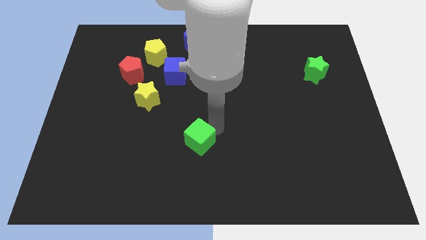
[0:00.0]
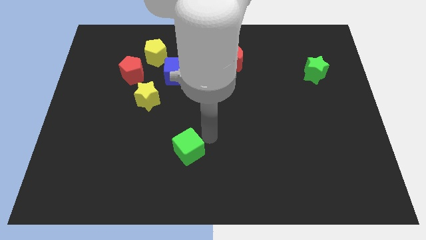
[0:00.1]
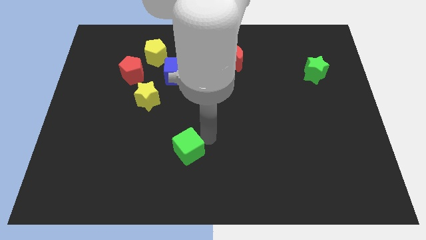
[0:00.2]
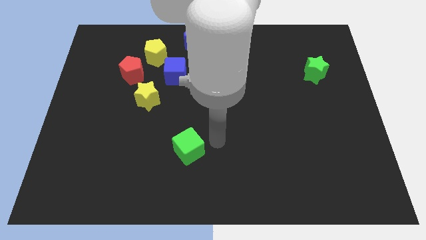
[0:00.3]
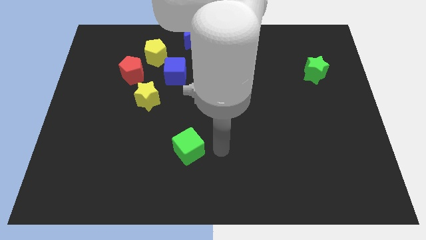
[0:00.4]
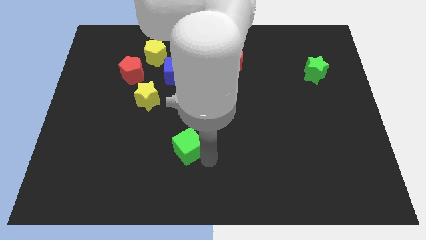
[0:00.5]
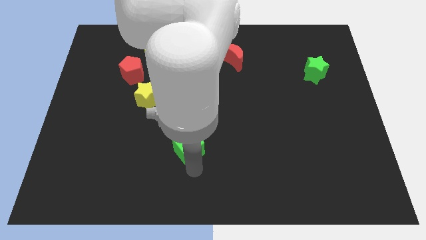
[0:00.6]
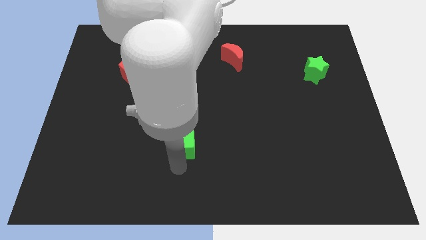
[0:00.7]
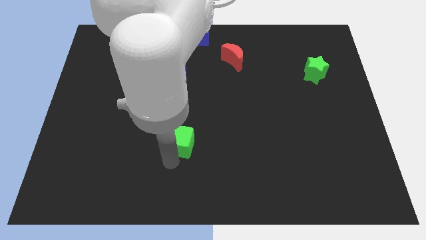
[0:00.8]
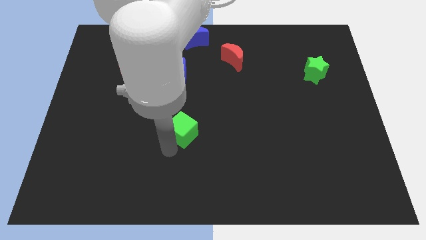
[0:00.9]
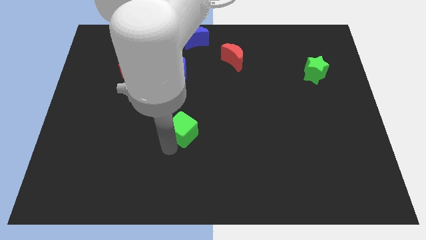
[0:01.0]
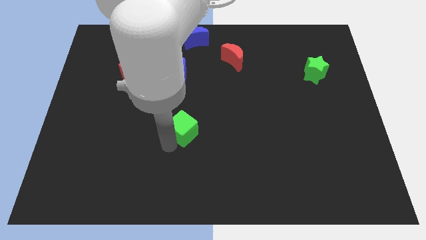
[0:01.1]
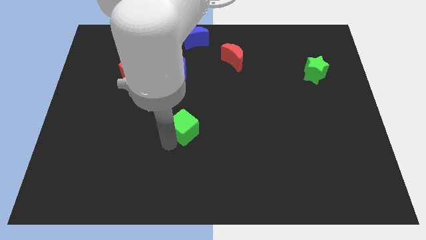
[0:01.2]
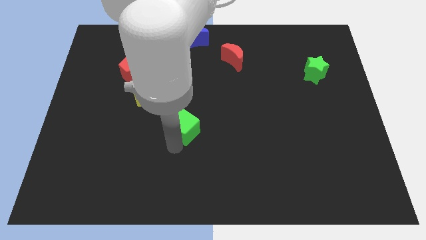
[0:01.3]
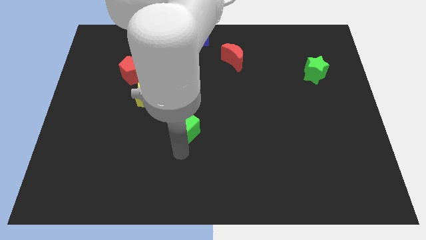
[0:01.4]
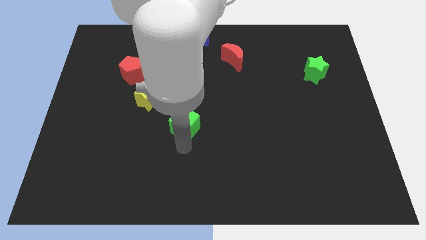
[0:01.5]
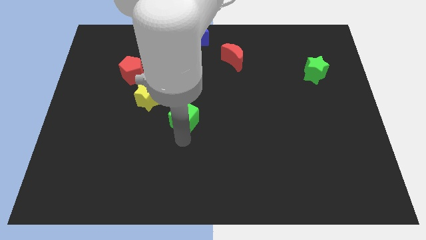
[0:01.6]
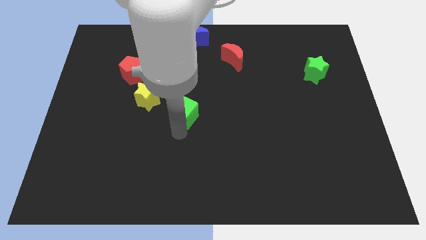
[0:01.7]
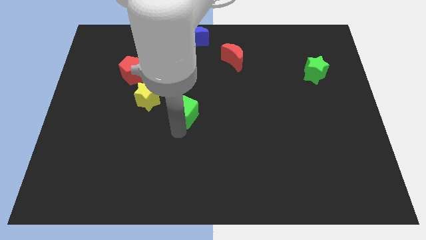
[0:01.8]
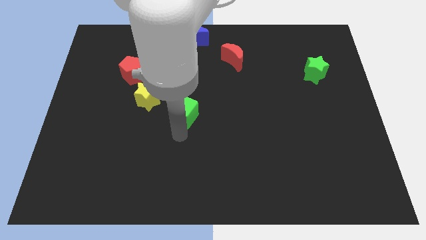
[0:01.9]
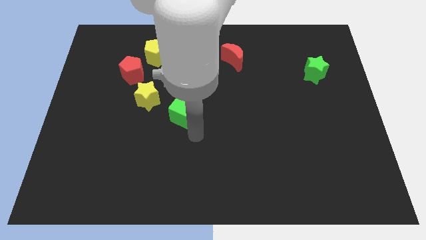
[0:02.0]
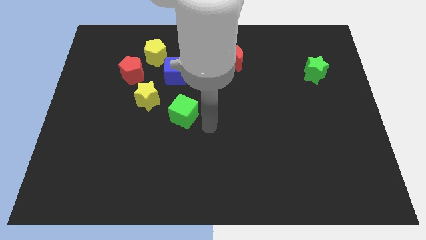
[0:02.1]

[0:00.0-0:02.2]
move the green cube towards the bottom right of the yellow star

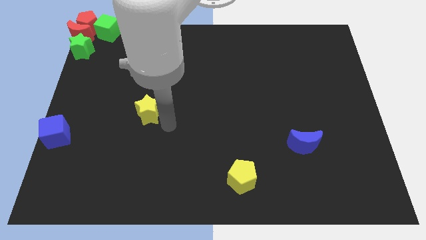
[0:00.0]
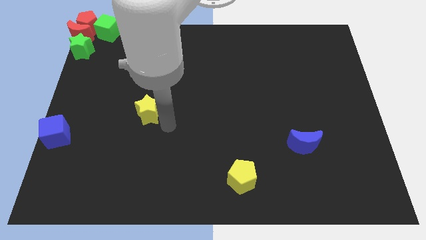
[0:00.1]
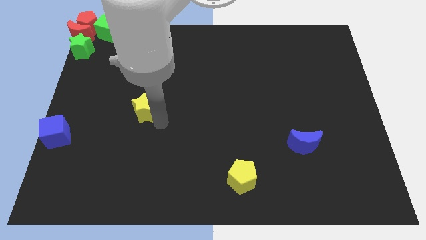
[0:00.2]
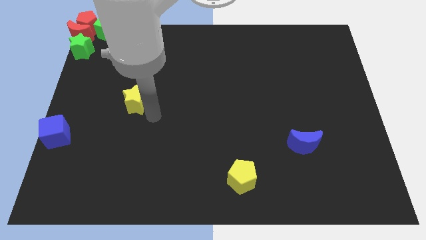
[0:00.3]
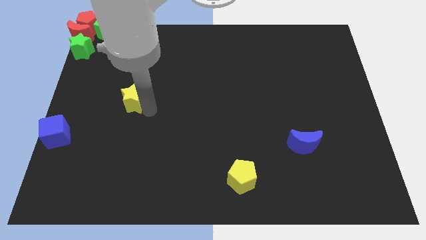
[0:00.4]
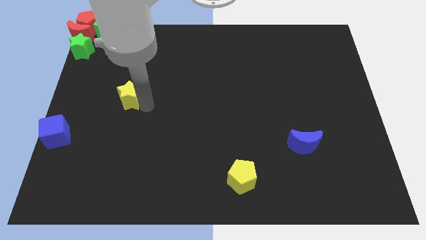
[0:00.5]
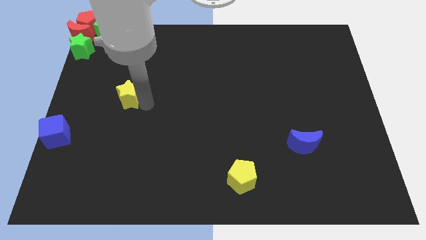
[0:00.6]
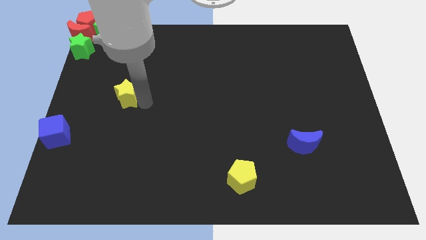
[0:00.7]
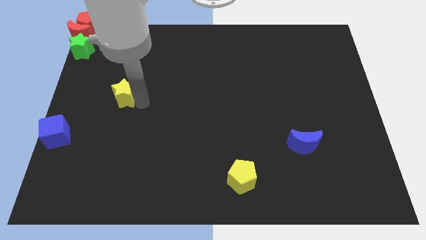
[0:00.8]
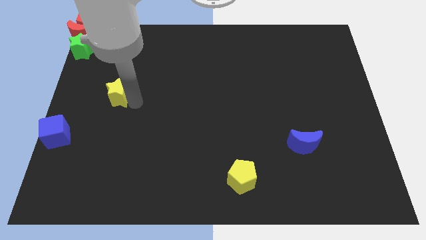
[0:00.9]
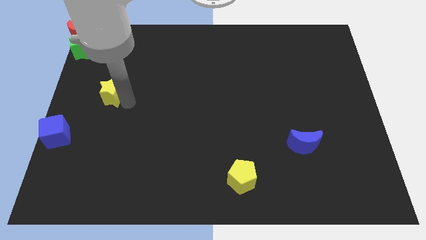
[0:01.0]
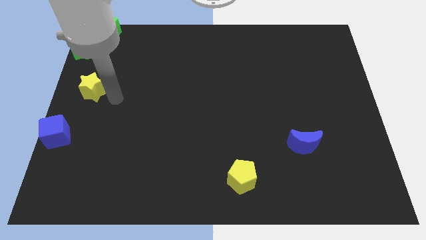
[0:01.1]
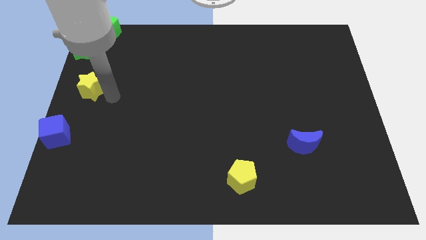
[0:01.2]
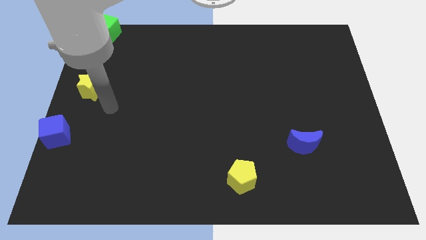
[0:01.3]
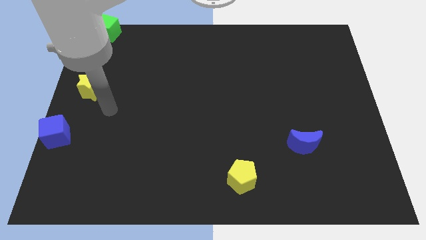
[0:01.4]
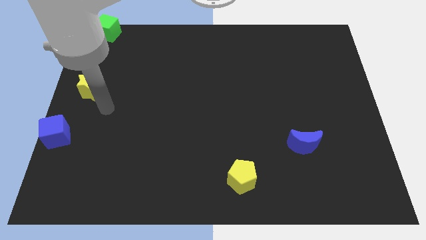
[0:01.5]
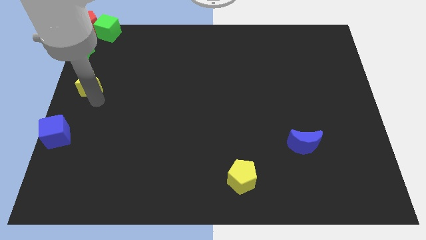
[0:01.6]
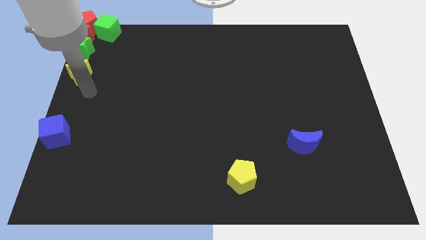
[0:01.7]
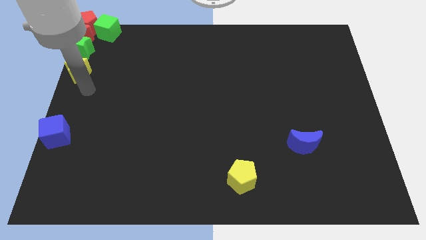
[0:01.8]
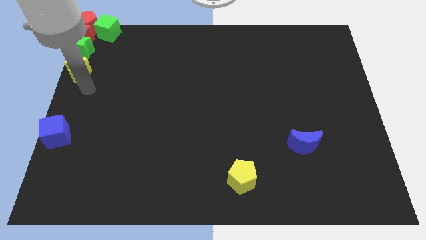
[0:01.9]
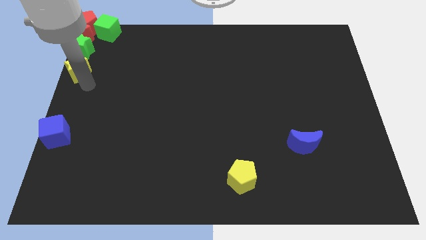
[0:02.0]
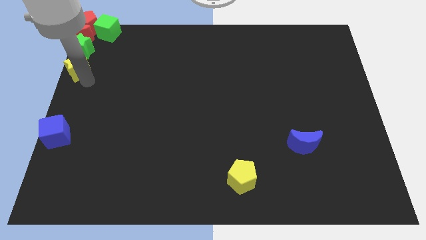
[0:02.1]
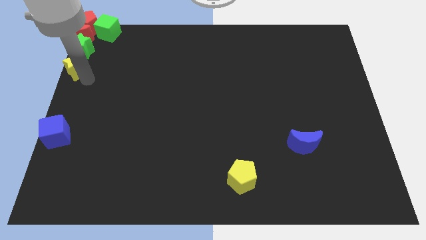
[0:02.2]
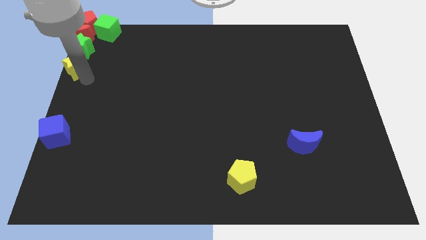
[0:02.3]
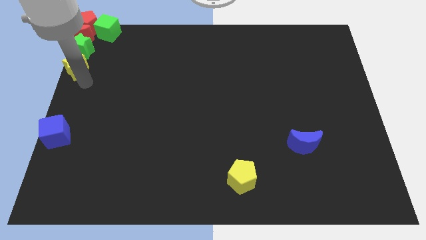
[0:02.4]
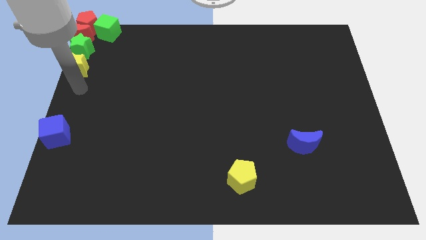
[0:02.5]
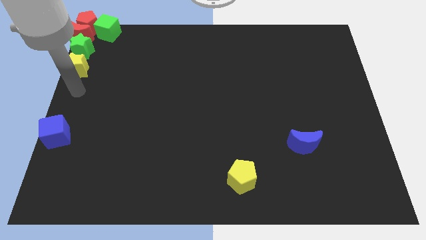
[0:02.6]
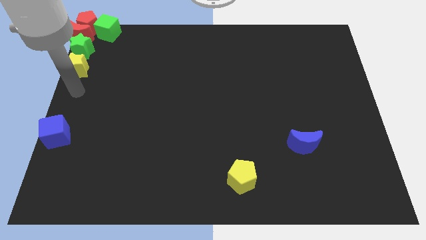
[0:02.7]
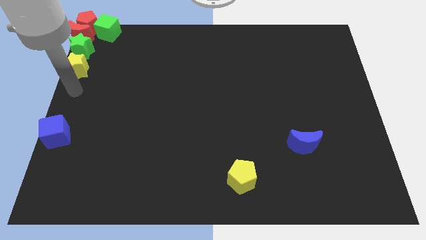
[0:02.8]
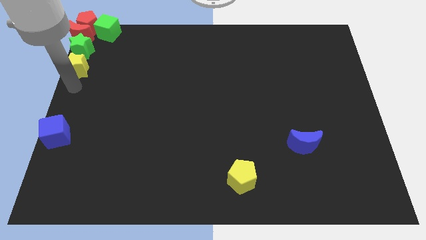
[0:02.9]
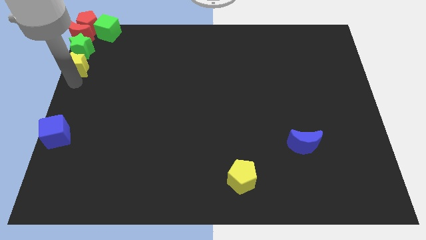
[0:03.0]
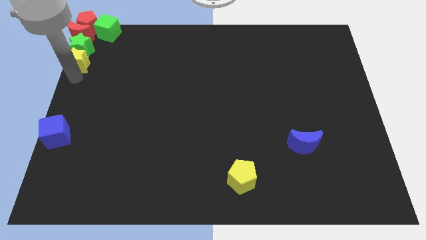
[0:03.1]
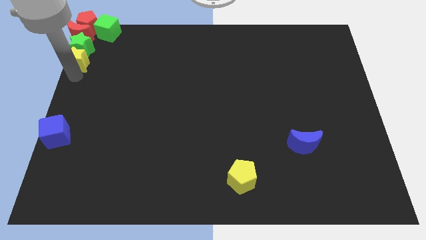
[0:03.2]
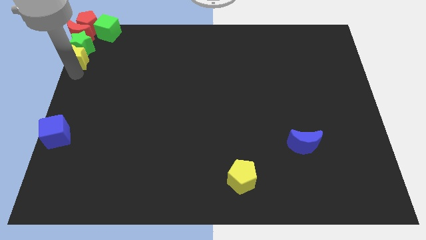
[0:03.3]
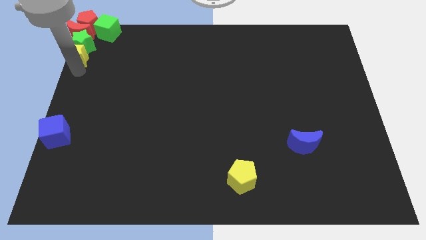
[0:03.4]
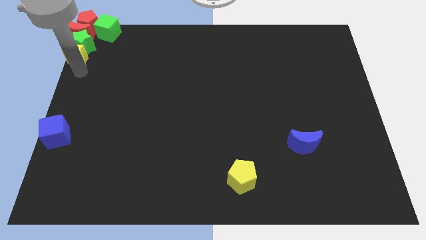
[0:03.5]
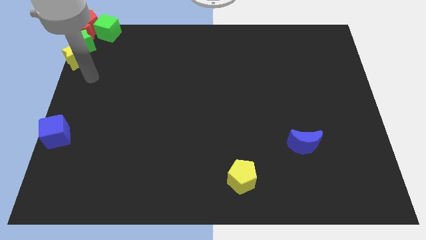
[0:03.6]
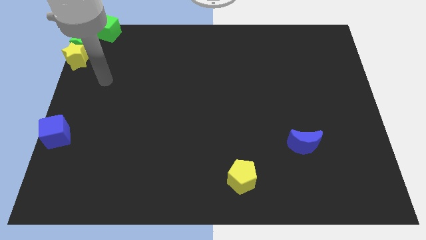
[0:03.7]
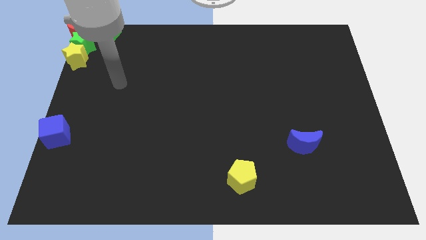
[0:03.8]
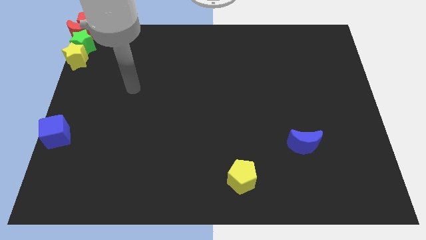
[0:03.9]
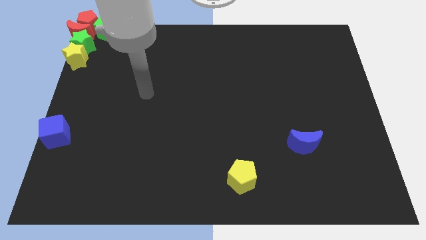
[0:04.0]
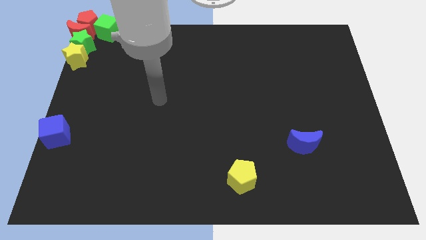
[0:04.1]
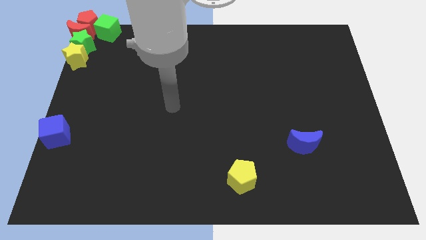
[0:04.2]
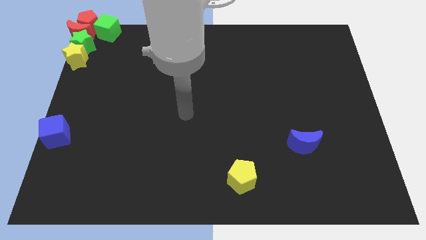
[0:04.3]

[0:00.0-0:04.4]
slide the yellow star to the bottom of the green star

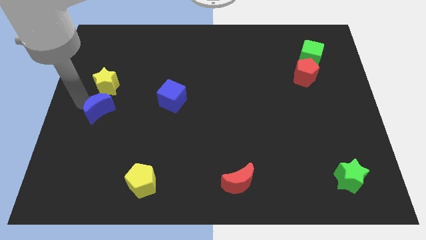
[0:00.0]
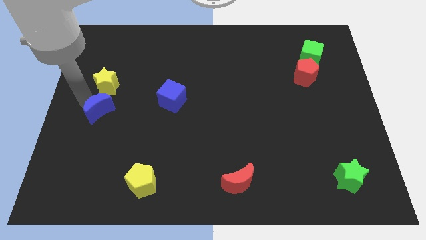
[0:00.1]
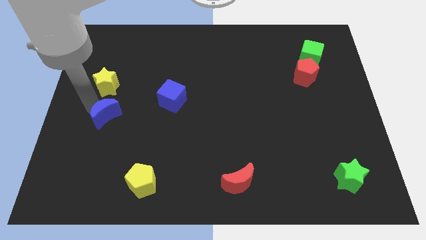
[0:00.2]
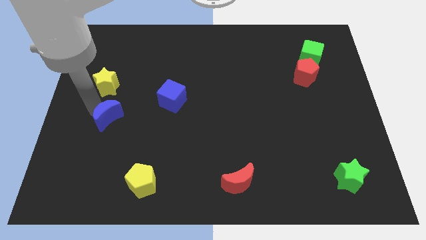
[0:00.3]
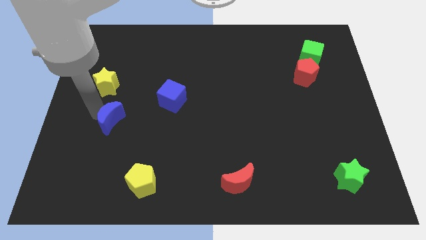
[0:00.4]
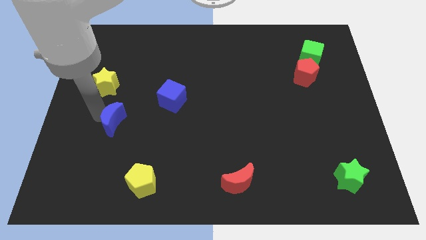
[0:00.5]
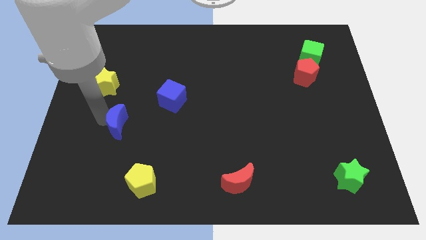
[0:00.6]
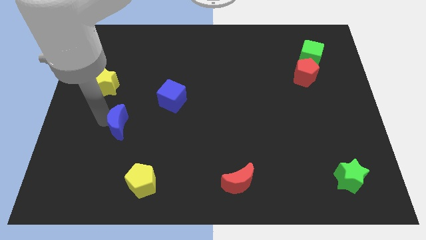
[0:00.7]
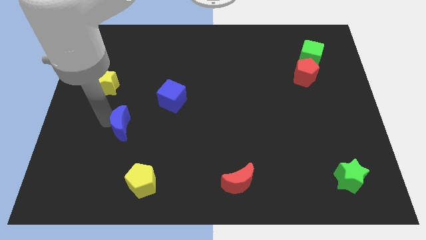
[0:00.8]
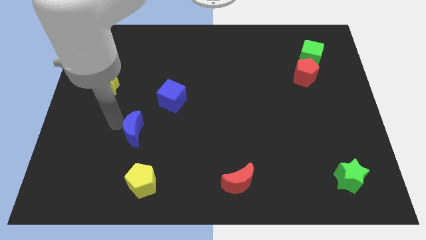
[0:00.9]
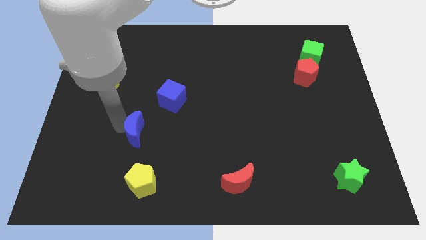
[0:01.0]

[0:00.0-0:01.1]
put the blue crescent above the yellow pentagon

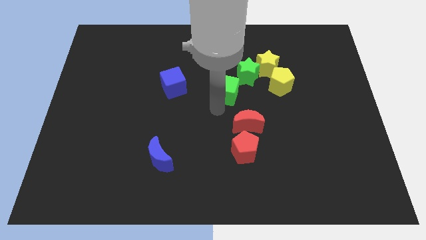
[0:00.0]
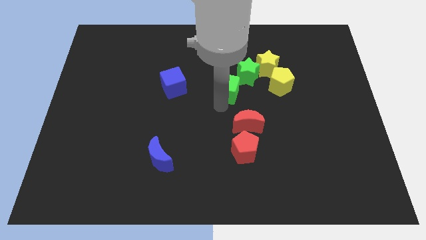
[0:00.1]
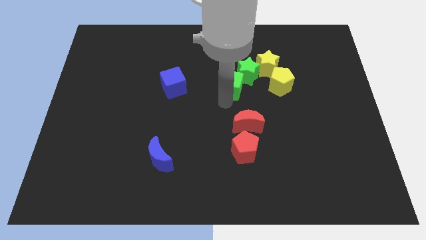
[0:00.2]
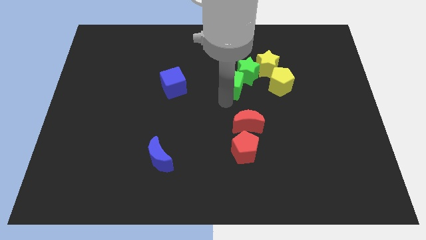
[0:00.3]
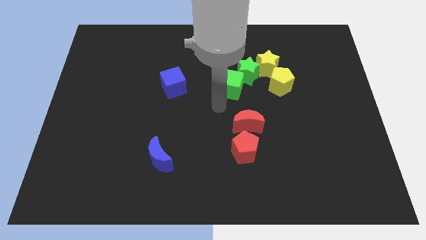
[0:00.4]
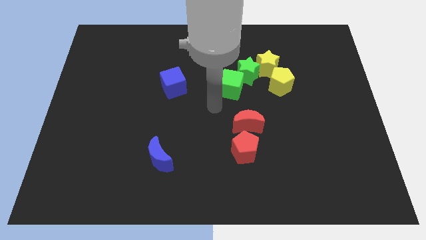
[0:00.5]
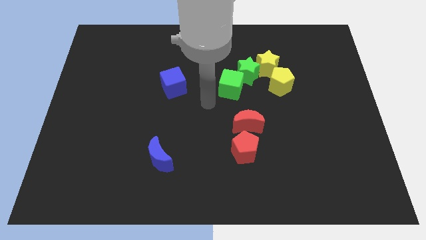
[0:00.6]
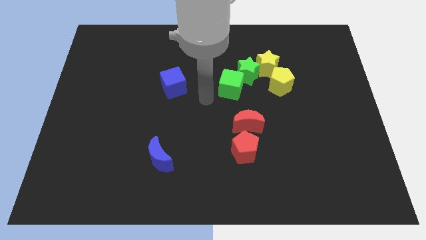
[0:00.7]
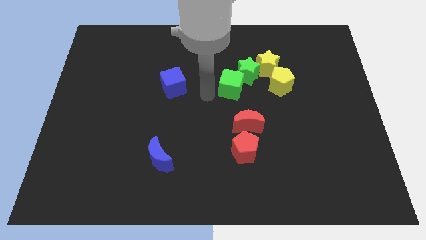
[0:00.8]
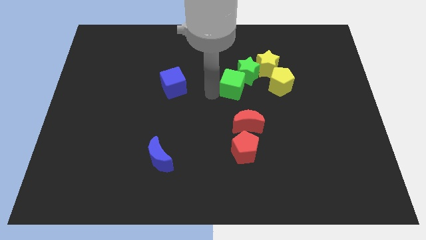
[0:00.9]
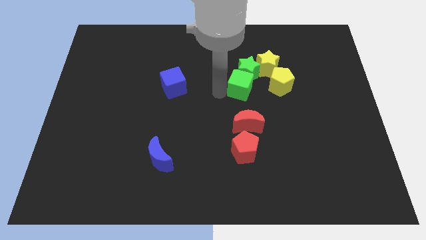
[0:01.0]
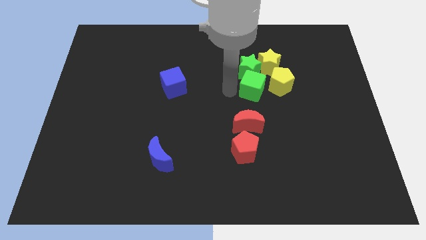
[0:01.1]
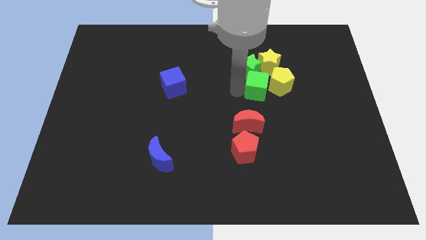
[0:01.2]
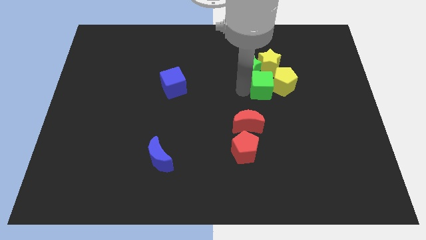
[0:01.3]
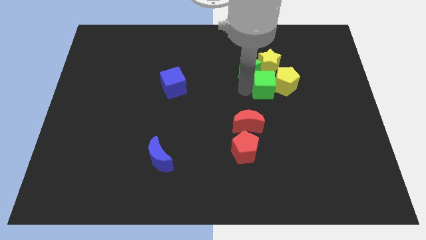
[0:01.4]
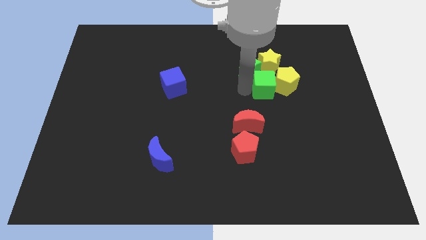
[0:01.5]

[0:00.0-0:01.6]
move the green cube to the left of the yellow pentagon
